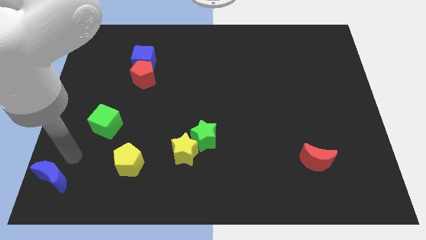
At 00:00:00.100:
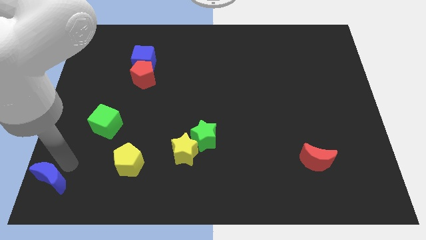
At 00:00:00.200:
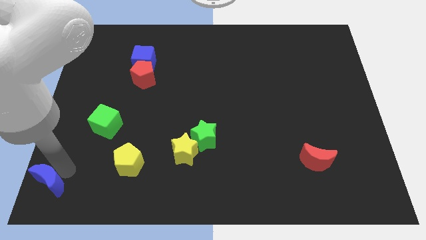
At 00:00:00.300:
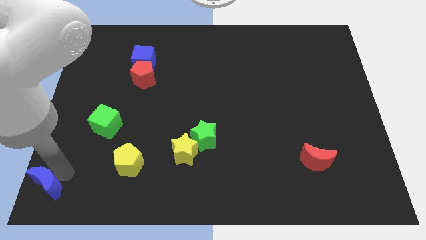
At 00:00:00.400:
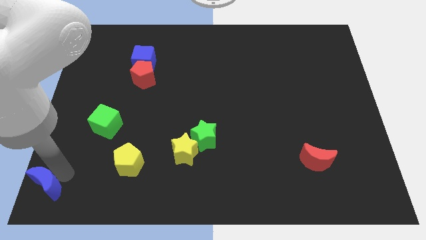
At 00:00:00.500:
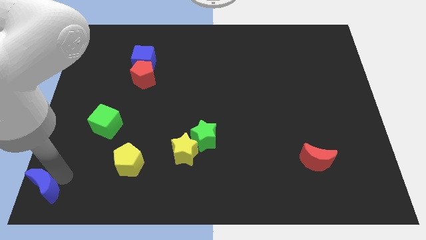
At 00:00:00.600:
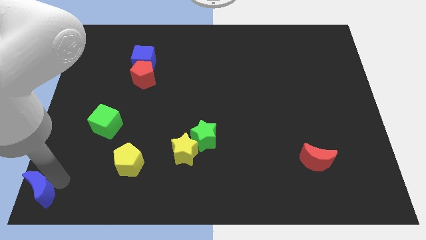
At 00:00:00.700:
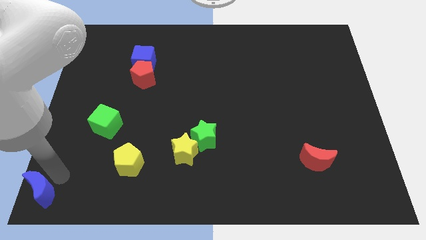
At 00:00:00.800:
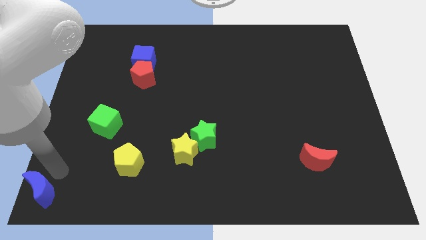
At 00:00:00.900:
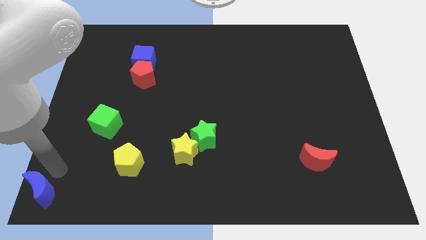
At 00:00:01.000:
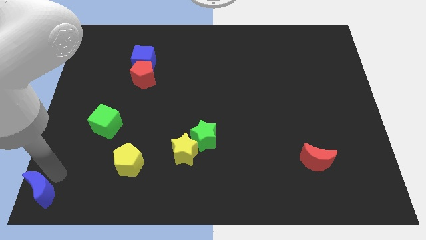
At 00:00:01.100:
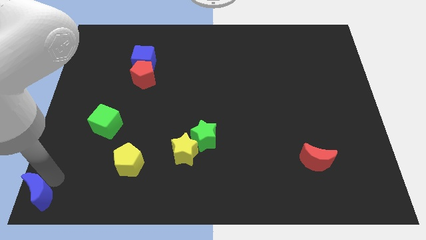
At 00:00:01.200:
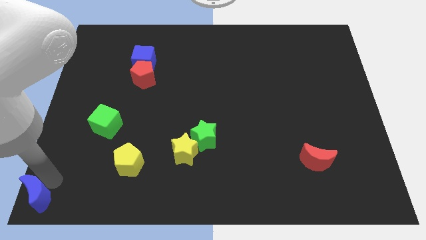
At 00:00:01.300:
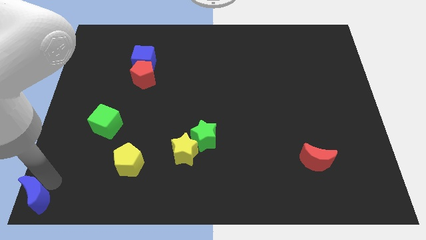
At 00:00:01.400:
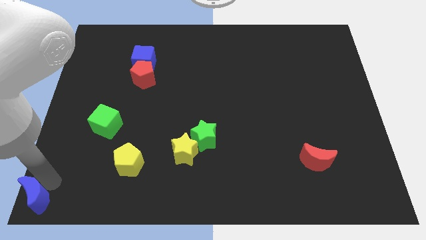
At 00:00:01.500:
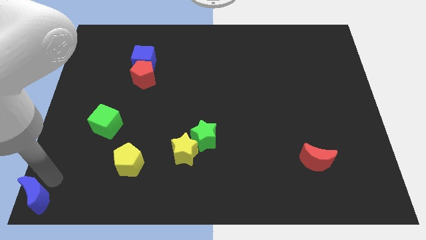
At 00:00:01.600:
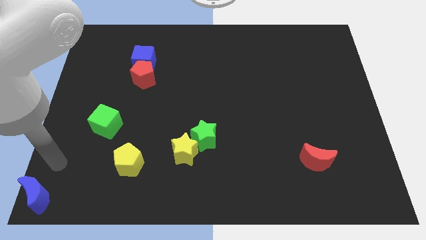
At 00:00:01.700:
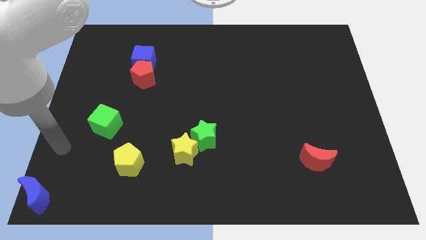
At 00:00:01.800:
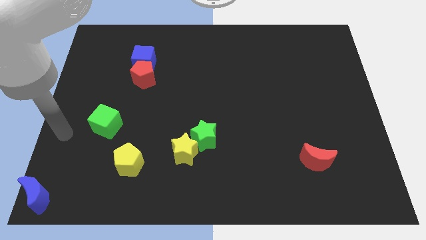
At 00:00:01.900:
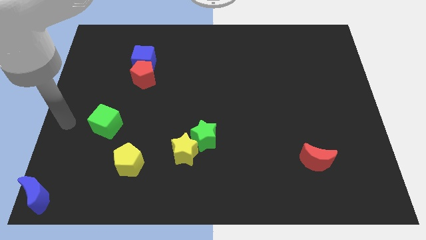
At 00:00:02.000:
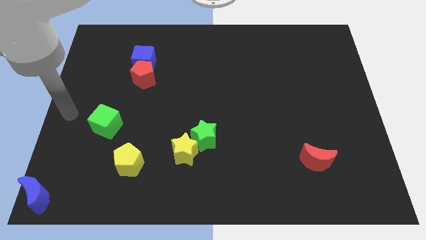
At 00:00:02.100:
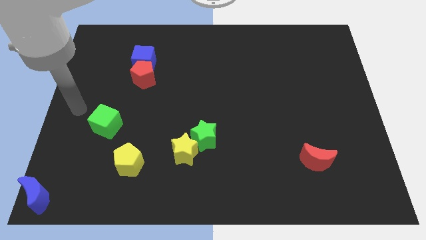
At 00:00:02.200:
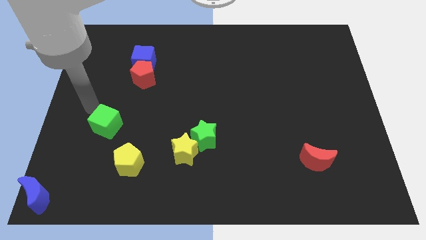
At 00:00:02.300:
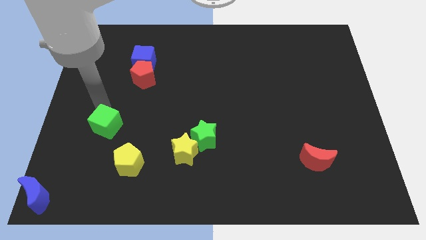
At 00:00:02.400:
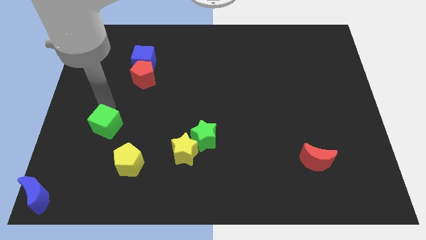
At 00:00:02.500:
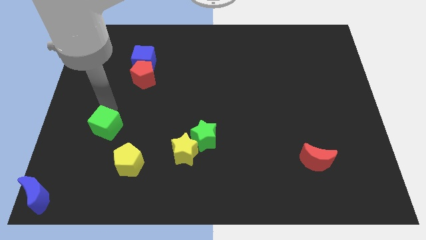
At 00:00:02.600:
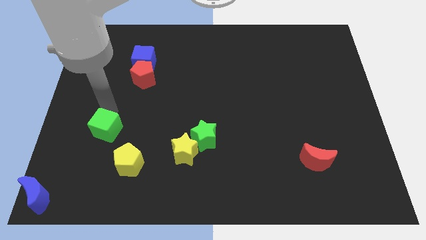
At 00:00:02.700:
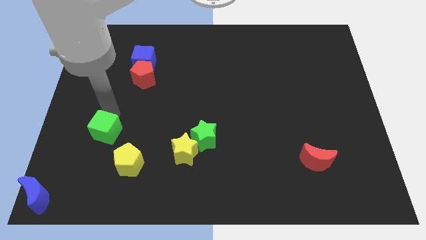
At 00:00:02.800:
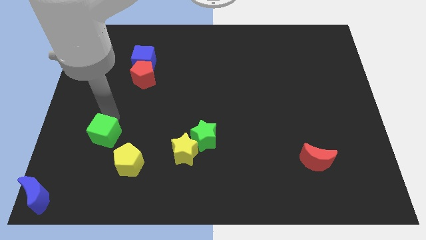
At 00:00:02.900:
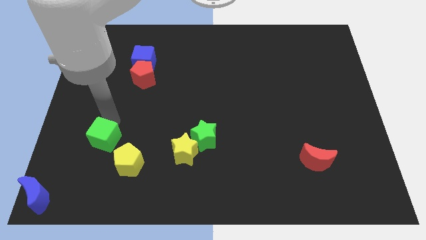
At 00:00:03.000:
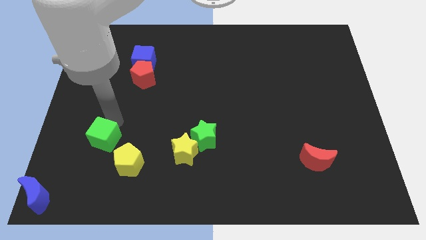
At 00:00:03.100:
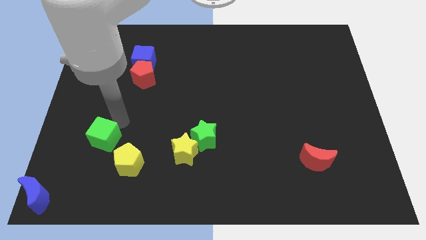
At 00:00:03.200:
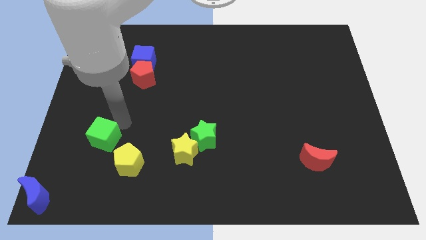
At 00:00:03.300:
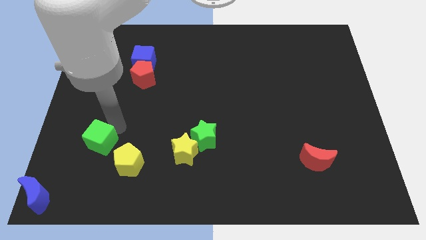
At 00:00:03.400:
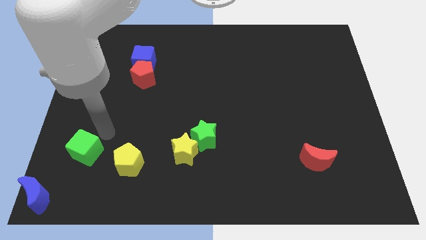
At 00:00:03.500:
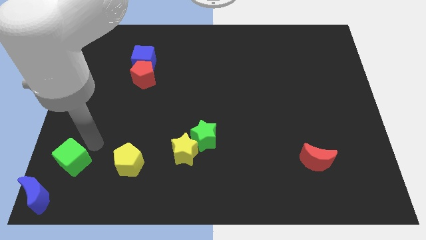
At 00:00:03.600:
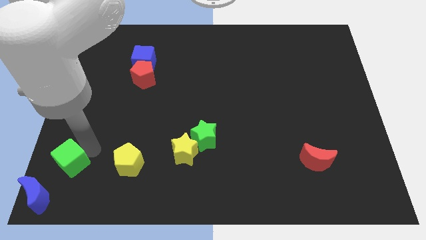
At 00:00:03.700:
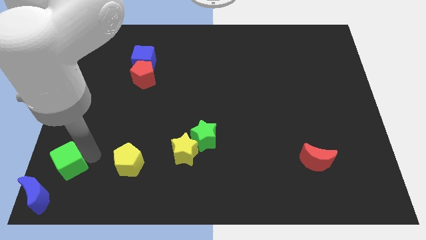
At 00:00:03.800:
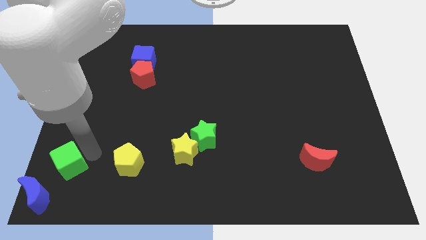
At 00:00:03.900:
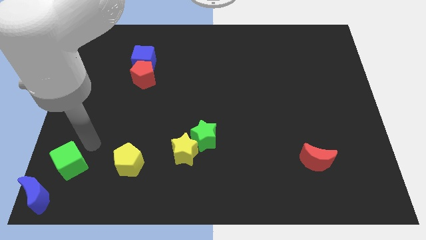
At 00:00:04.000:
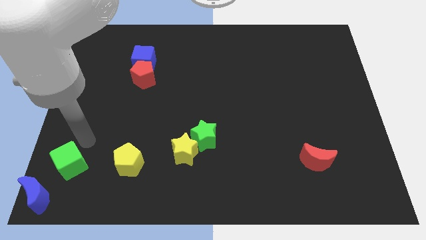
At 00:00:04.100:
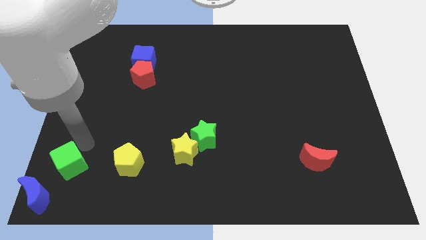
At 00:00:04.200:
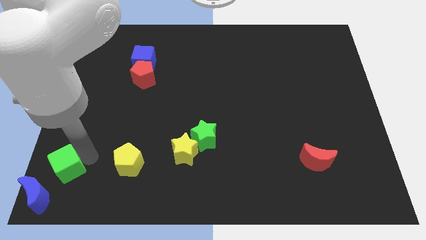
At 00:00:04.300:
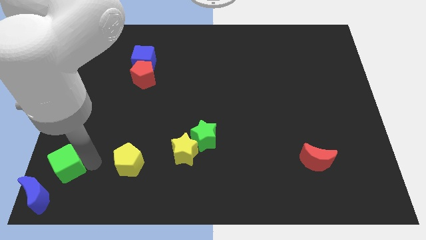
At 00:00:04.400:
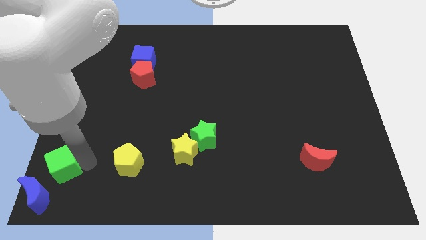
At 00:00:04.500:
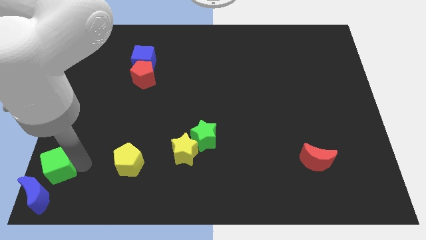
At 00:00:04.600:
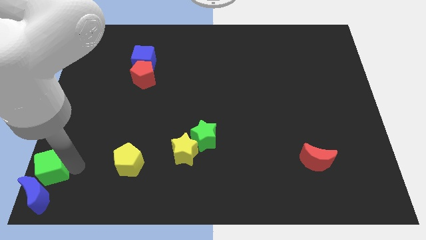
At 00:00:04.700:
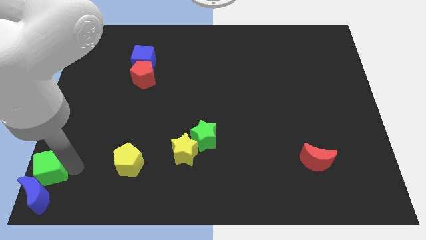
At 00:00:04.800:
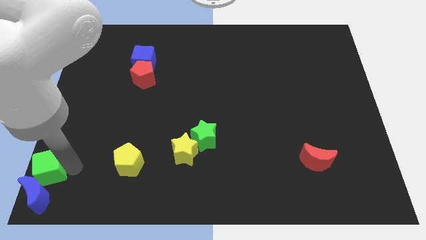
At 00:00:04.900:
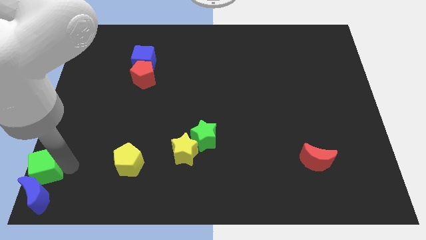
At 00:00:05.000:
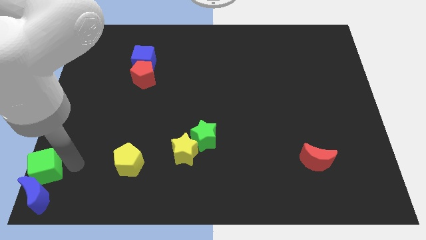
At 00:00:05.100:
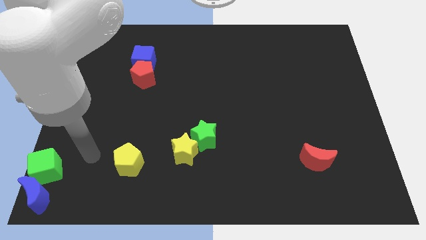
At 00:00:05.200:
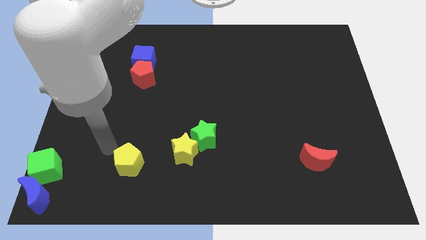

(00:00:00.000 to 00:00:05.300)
move green cube above the blue moon

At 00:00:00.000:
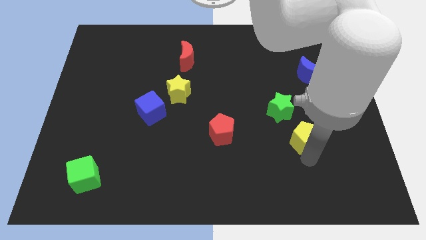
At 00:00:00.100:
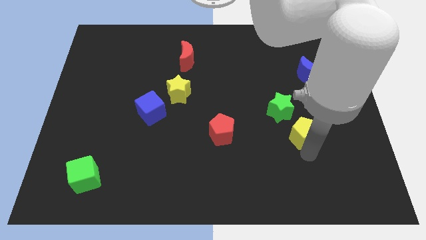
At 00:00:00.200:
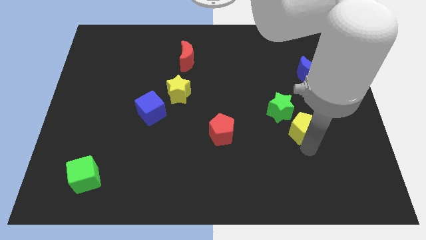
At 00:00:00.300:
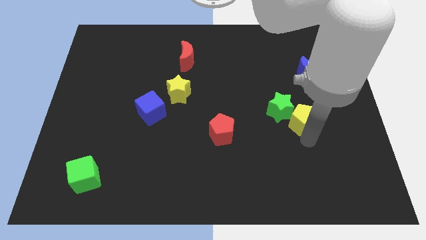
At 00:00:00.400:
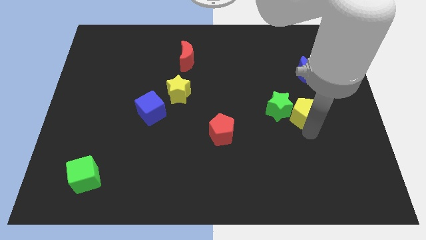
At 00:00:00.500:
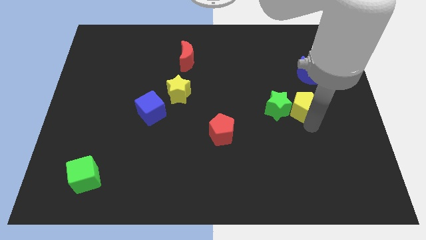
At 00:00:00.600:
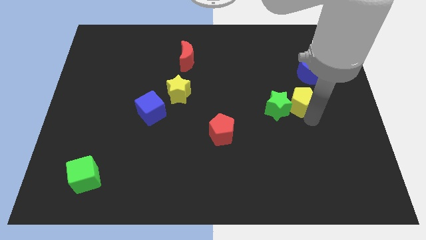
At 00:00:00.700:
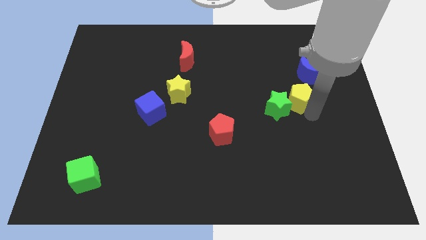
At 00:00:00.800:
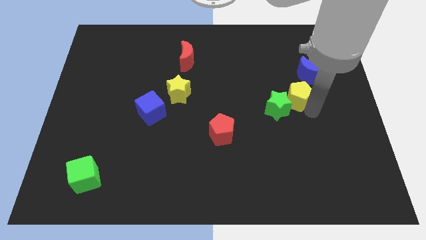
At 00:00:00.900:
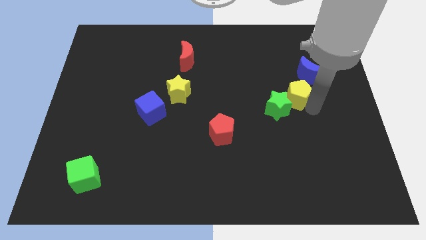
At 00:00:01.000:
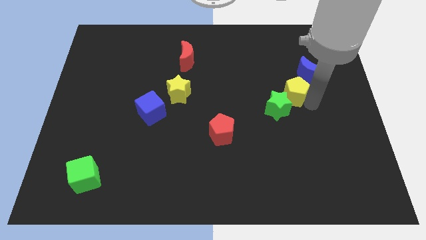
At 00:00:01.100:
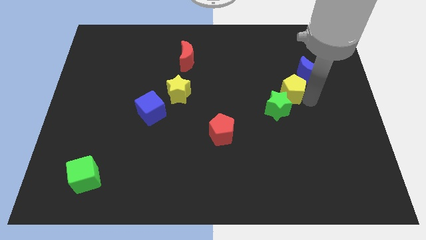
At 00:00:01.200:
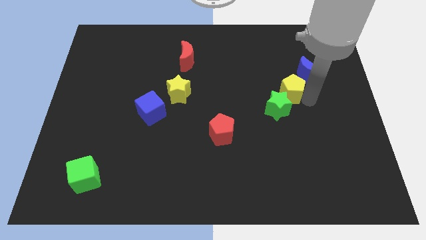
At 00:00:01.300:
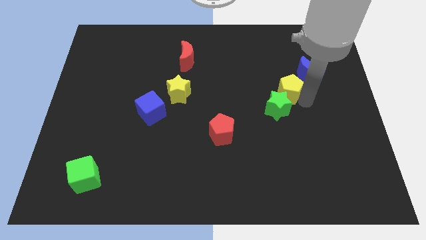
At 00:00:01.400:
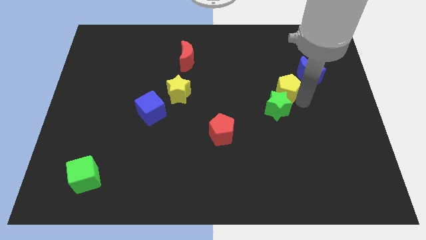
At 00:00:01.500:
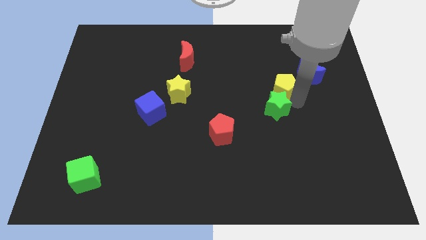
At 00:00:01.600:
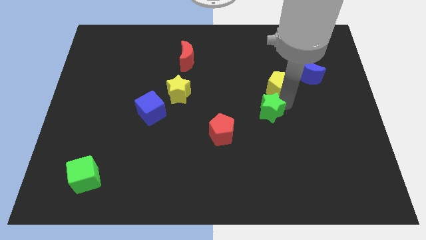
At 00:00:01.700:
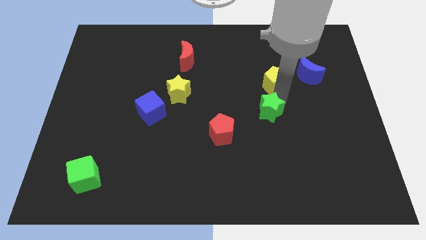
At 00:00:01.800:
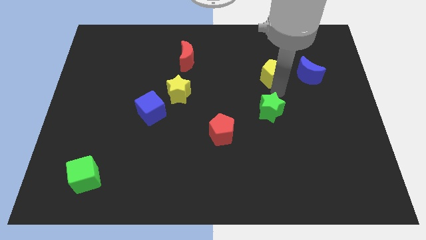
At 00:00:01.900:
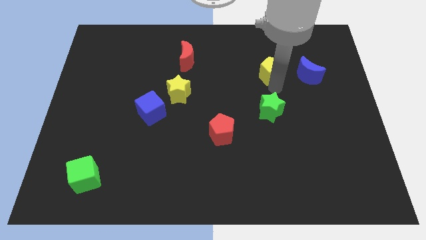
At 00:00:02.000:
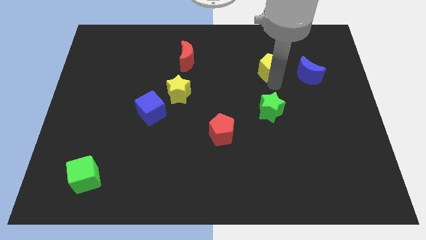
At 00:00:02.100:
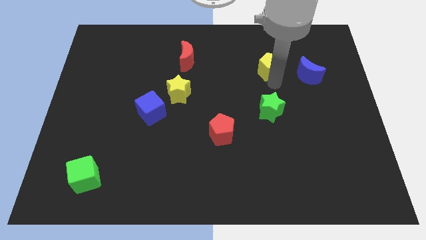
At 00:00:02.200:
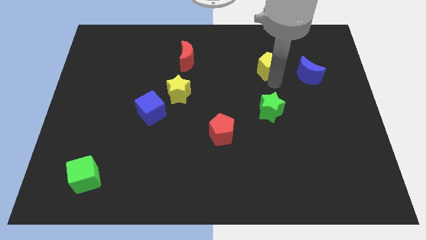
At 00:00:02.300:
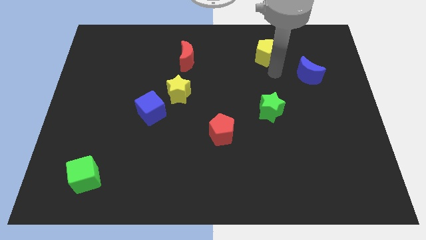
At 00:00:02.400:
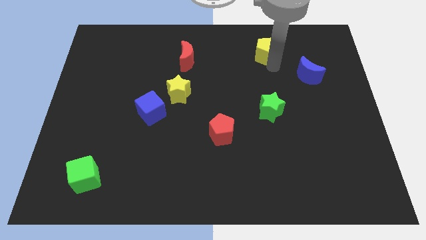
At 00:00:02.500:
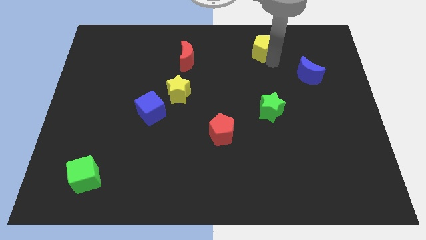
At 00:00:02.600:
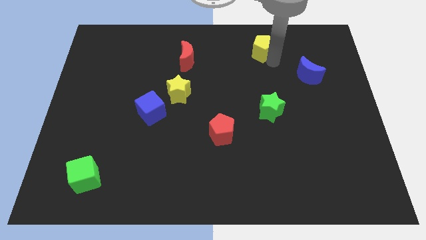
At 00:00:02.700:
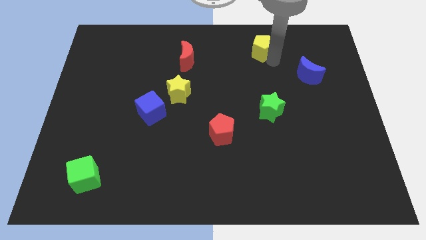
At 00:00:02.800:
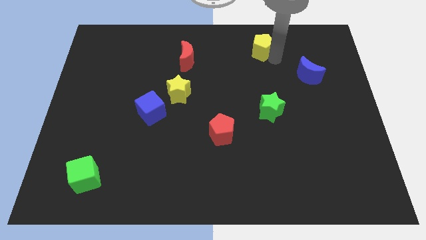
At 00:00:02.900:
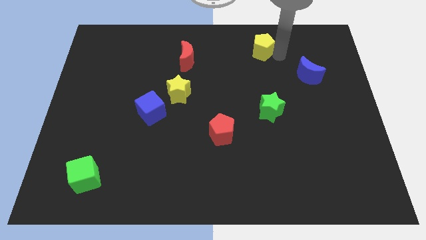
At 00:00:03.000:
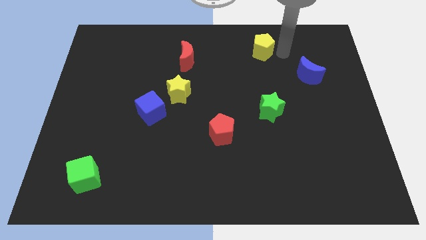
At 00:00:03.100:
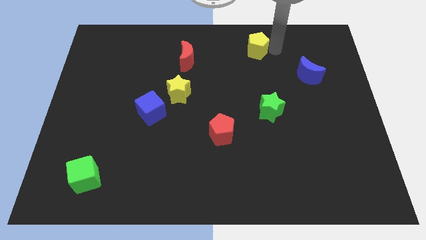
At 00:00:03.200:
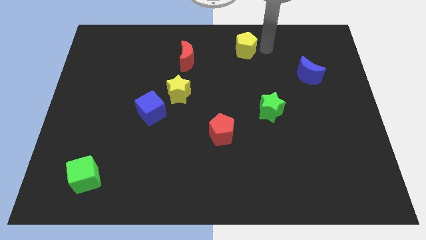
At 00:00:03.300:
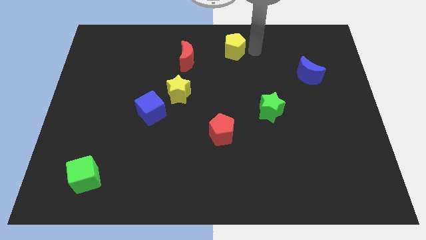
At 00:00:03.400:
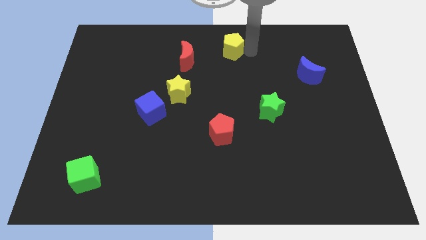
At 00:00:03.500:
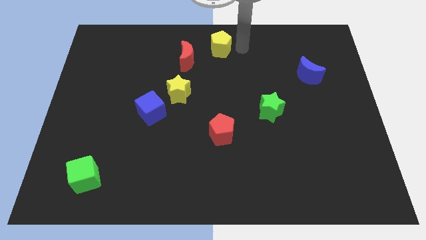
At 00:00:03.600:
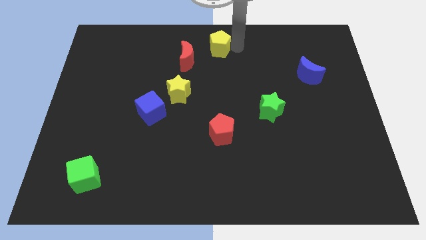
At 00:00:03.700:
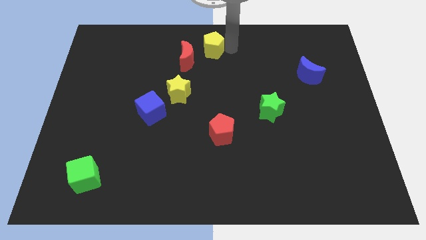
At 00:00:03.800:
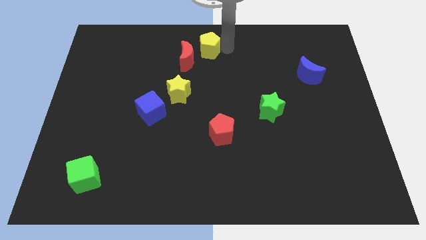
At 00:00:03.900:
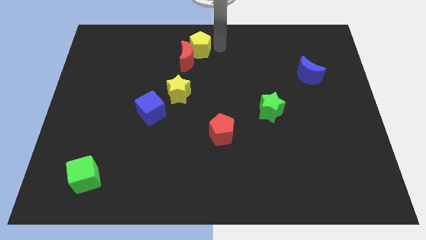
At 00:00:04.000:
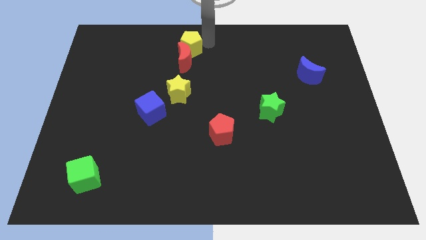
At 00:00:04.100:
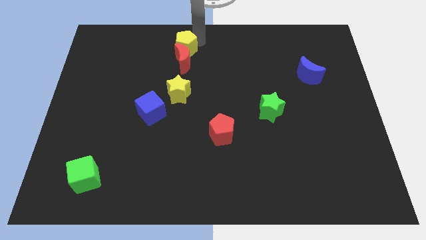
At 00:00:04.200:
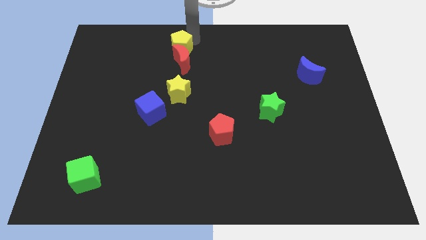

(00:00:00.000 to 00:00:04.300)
move the yellow pentagon to the top of the red crescent
